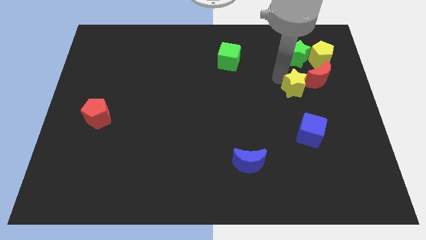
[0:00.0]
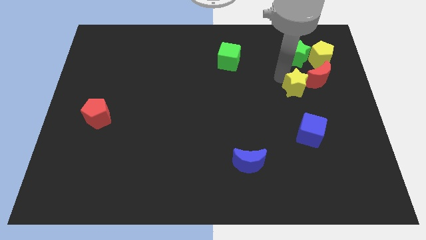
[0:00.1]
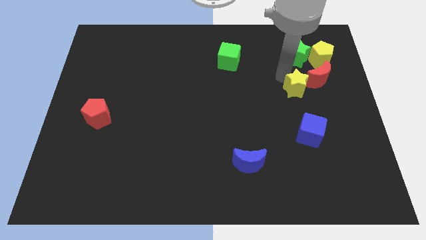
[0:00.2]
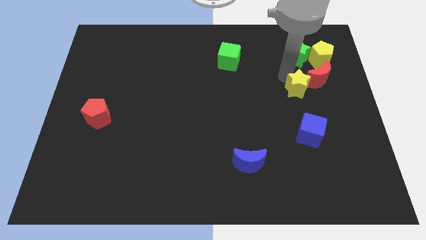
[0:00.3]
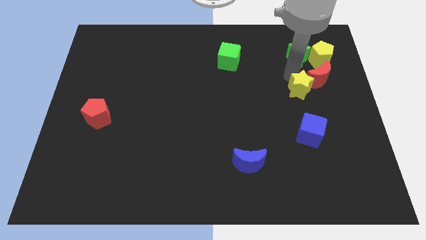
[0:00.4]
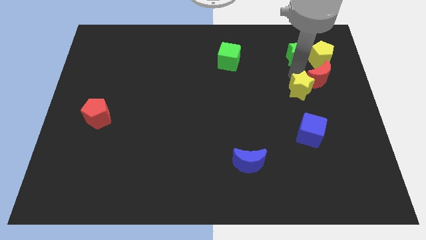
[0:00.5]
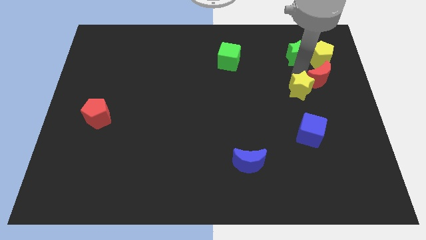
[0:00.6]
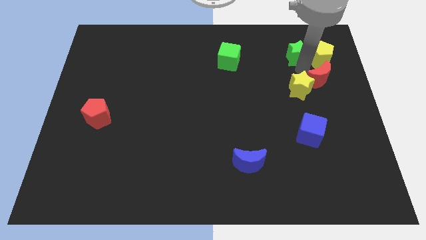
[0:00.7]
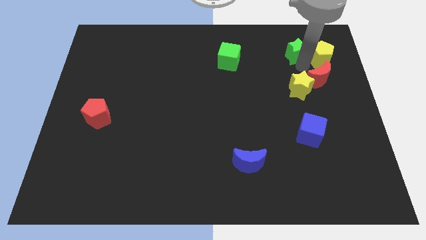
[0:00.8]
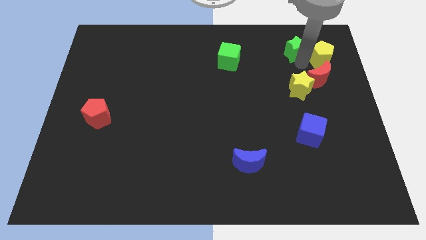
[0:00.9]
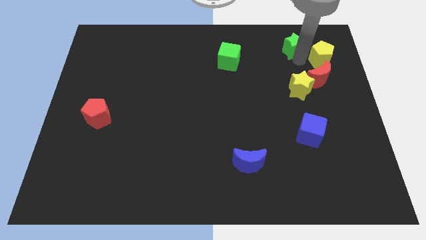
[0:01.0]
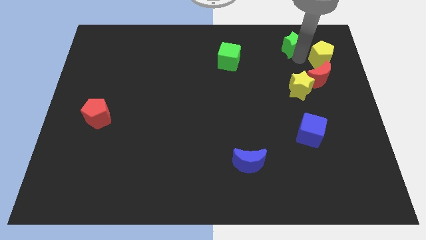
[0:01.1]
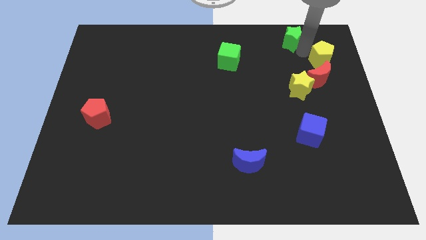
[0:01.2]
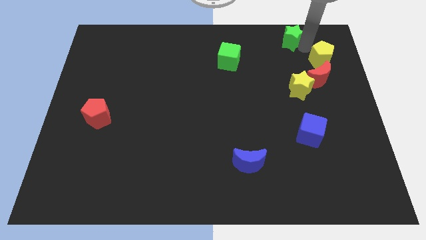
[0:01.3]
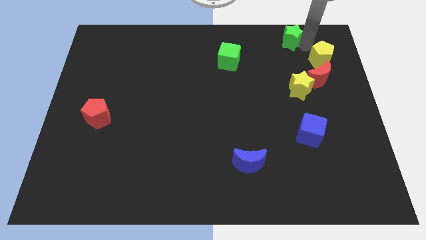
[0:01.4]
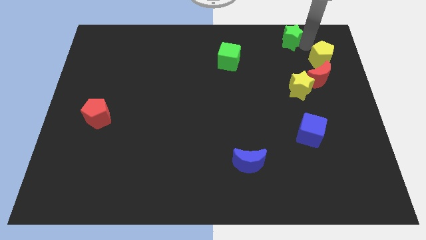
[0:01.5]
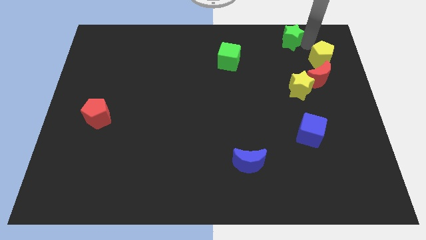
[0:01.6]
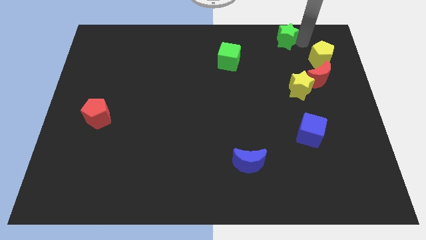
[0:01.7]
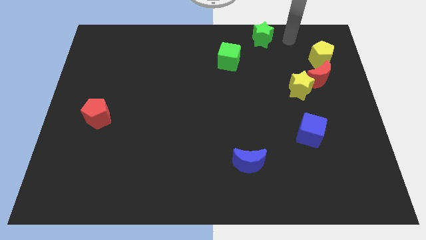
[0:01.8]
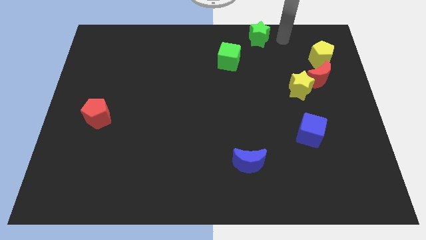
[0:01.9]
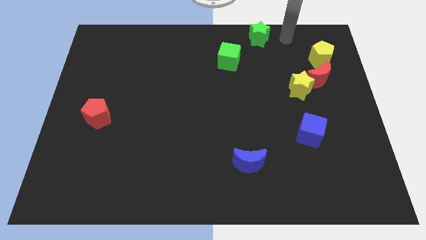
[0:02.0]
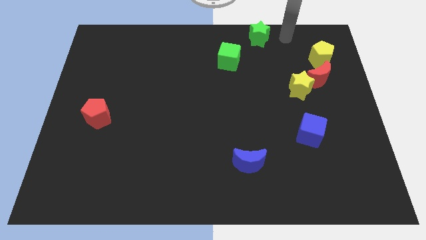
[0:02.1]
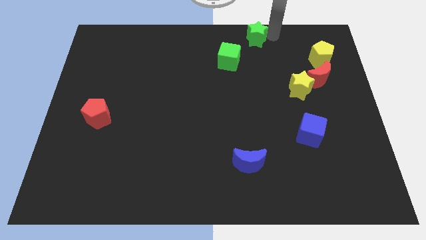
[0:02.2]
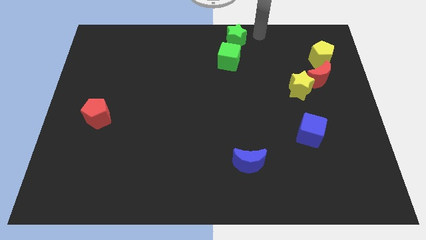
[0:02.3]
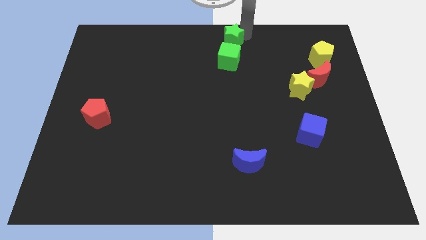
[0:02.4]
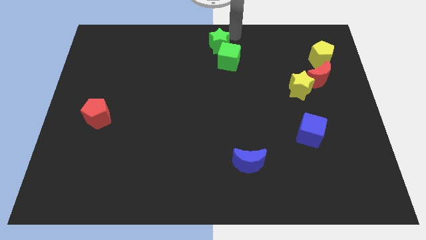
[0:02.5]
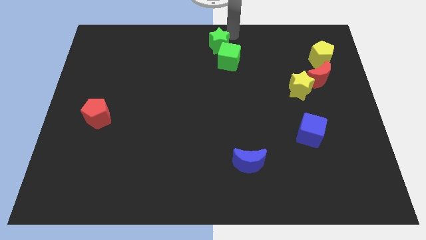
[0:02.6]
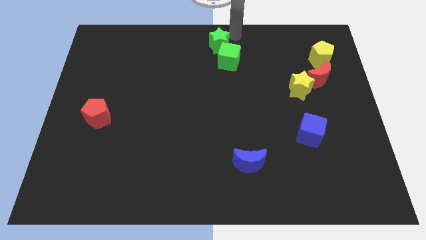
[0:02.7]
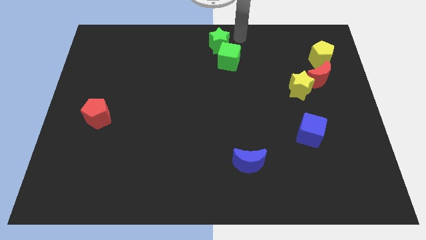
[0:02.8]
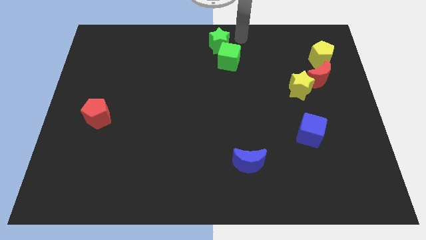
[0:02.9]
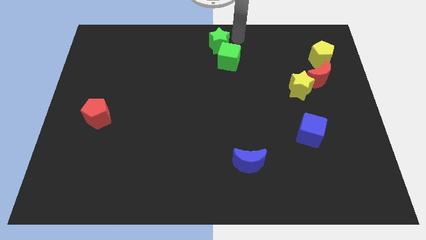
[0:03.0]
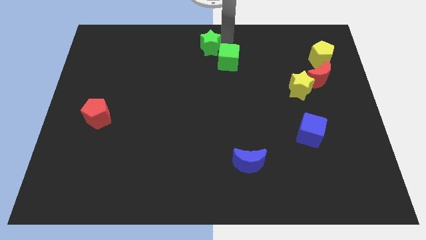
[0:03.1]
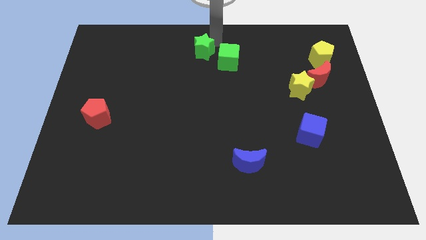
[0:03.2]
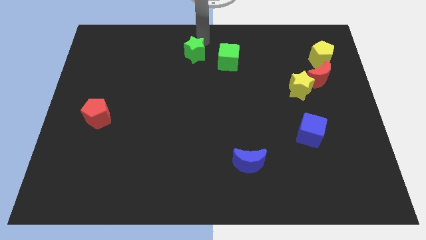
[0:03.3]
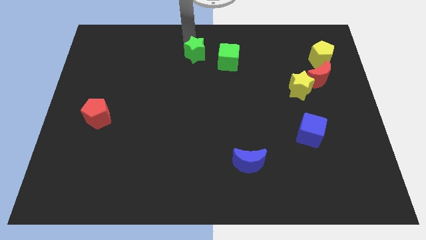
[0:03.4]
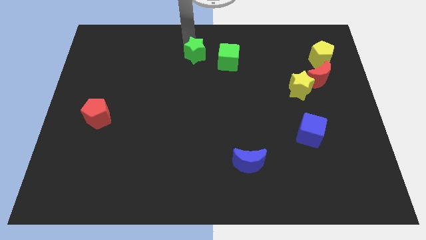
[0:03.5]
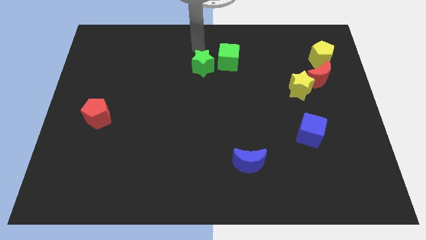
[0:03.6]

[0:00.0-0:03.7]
place the green star left to the green cube

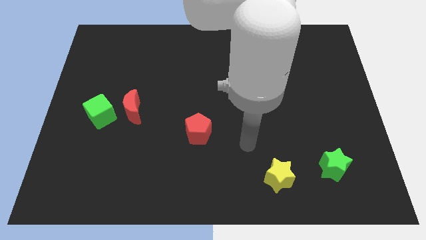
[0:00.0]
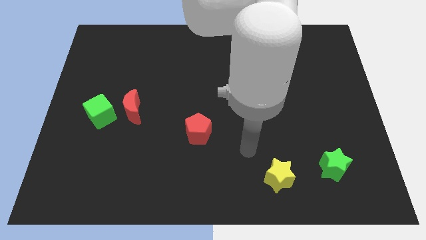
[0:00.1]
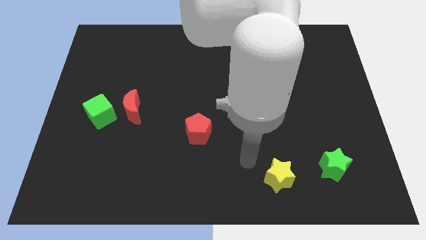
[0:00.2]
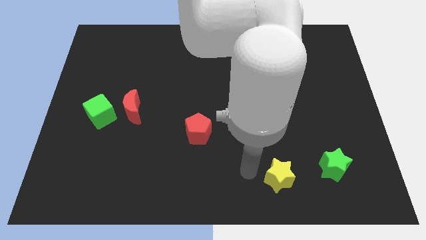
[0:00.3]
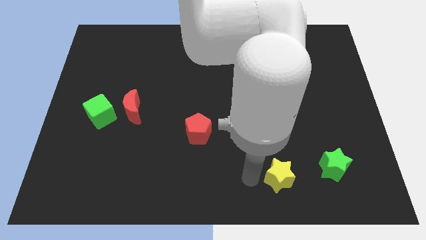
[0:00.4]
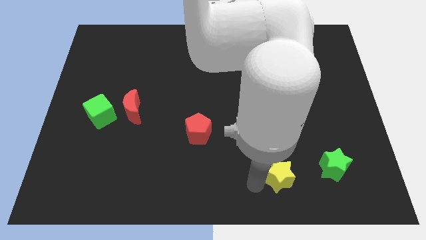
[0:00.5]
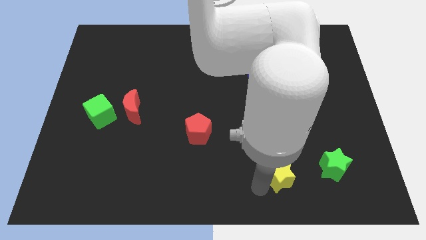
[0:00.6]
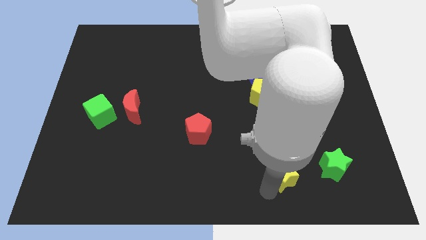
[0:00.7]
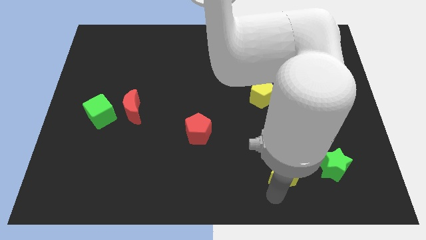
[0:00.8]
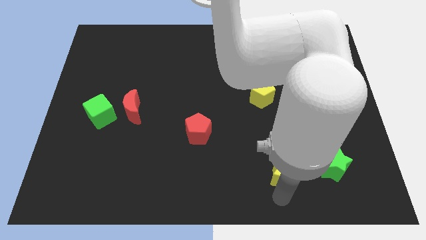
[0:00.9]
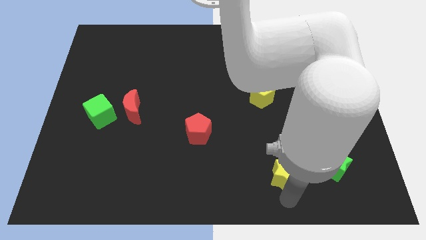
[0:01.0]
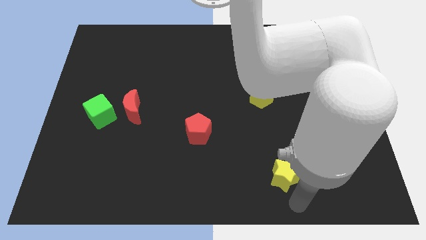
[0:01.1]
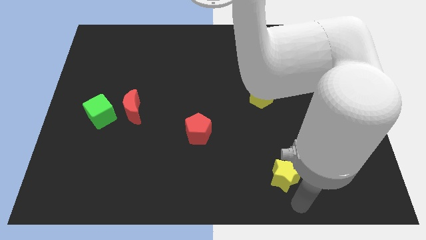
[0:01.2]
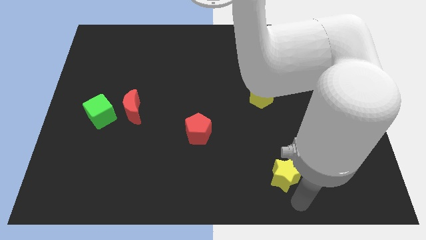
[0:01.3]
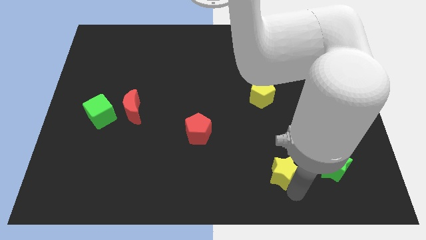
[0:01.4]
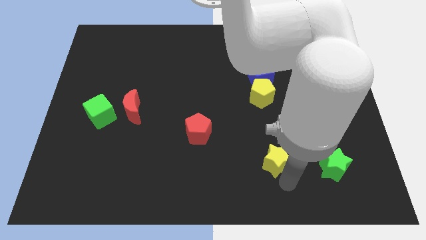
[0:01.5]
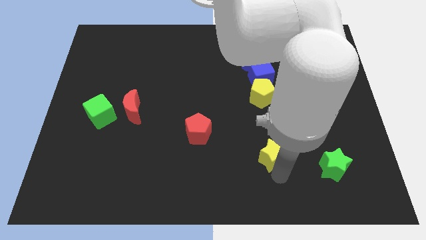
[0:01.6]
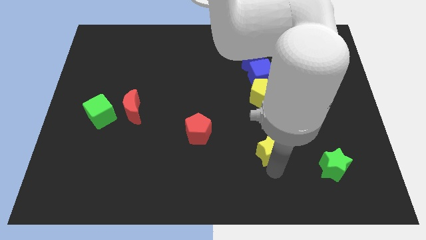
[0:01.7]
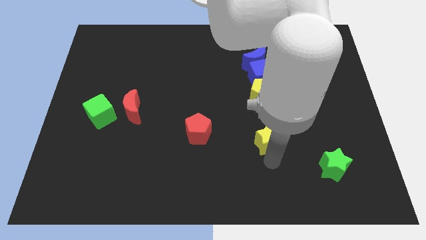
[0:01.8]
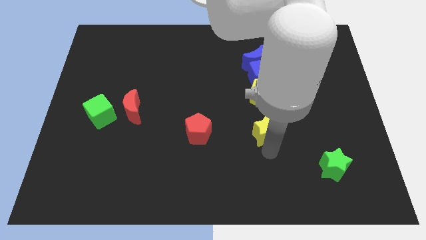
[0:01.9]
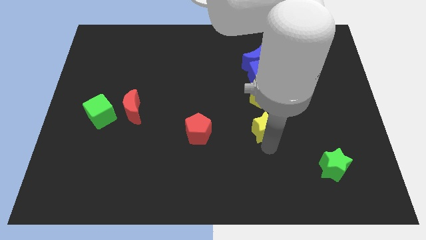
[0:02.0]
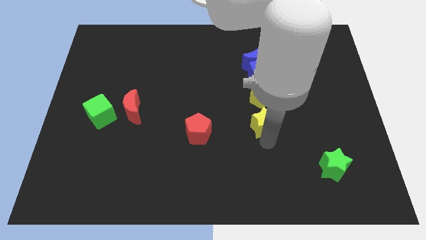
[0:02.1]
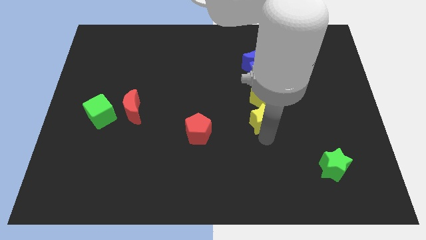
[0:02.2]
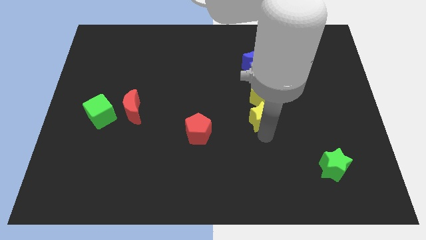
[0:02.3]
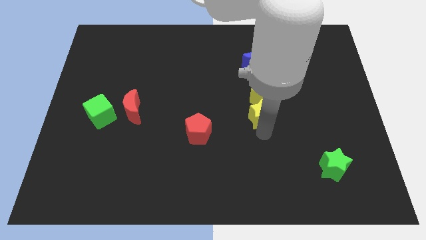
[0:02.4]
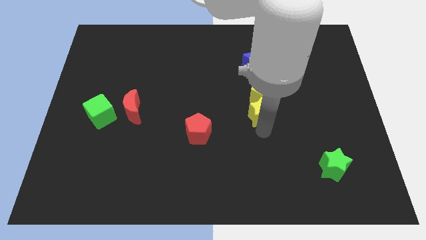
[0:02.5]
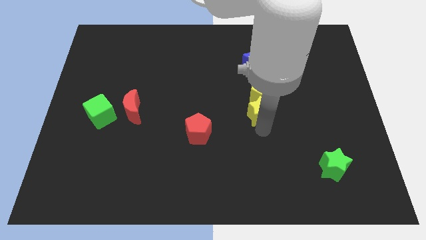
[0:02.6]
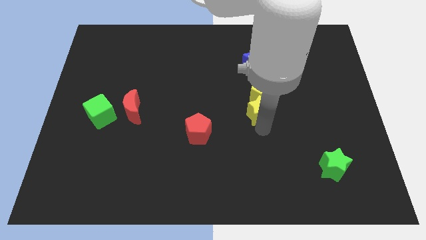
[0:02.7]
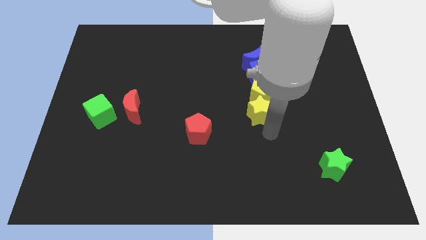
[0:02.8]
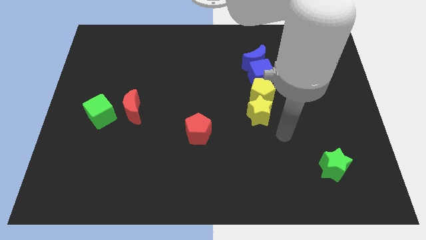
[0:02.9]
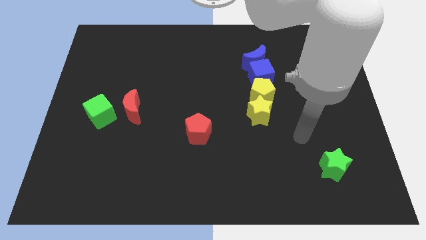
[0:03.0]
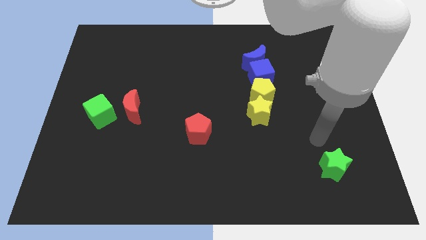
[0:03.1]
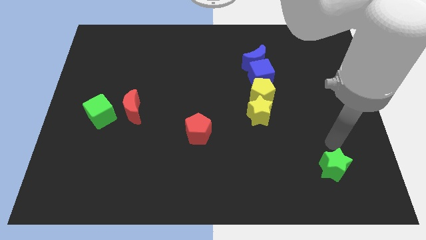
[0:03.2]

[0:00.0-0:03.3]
push the yellow star into the yellow pentagon

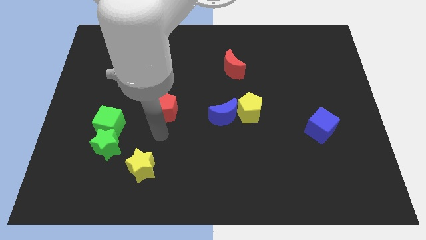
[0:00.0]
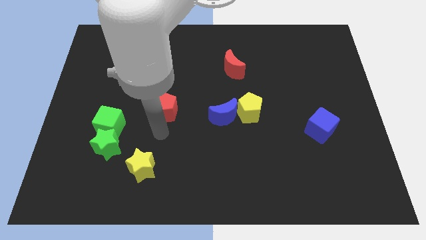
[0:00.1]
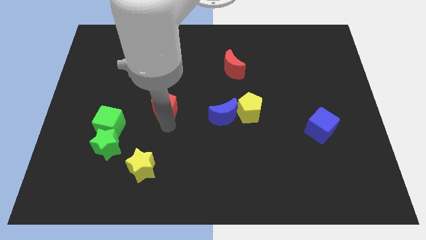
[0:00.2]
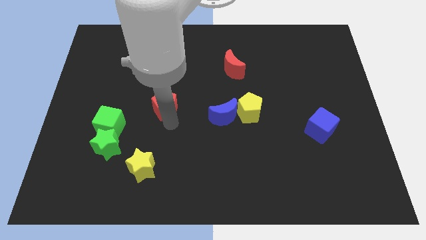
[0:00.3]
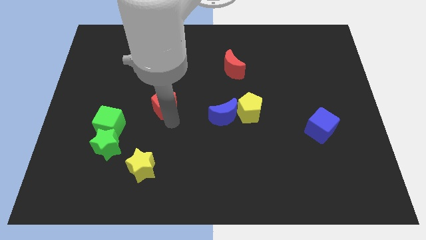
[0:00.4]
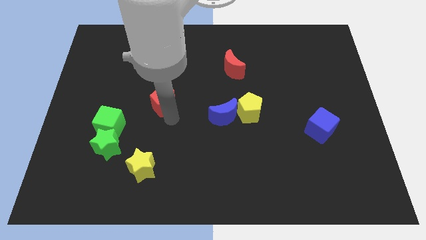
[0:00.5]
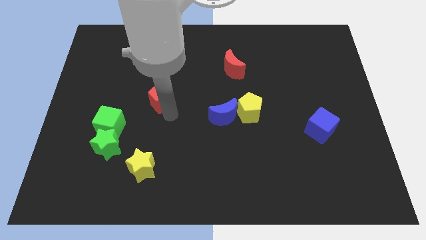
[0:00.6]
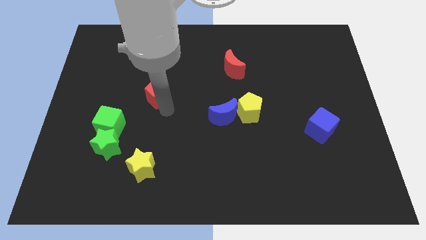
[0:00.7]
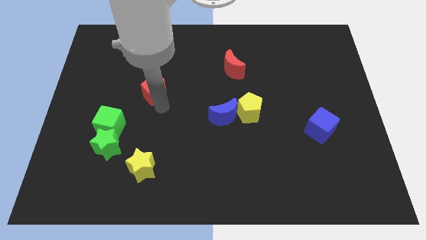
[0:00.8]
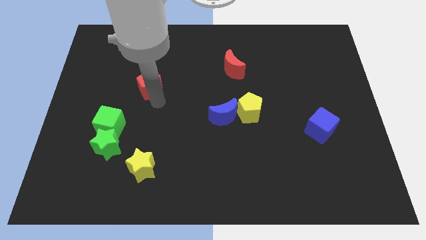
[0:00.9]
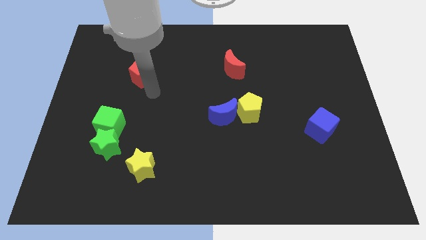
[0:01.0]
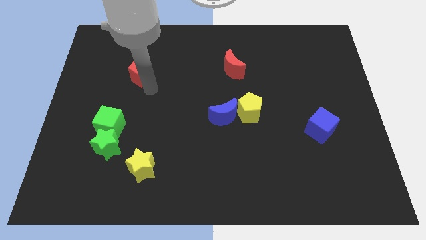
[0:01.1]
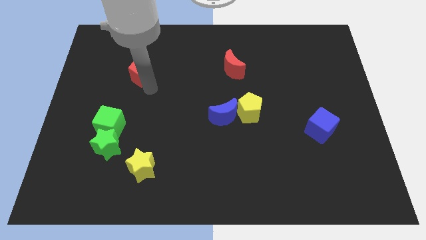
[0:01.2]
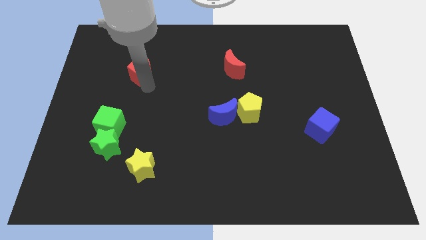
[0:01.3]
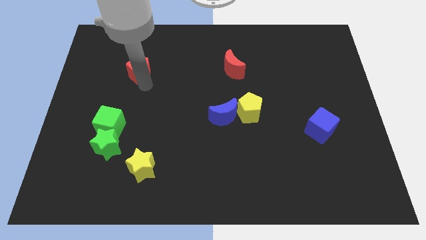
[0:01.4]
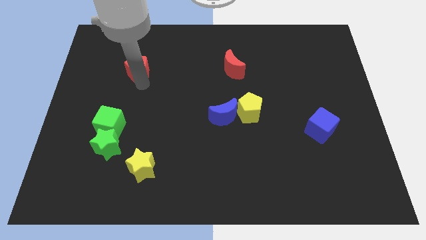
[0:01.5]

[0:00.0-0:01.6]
move the red pentagon to the left of the red crescent

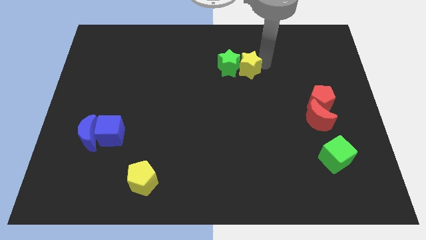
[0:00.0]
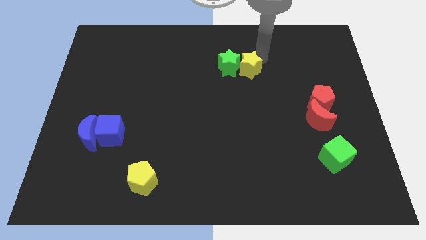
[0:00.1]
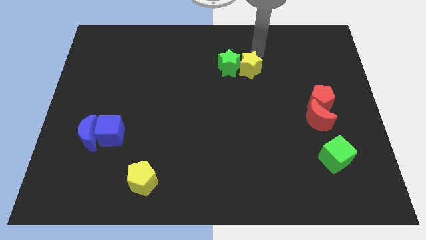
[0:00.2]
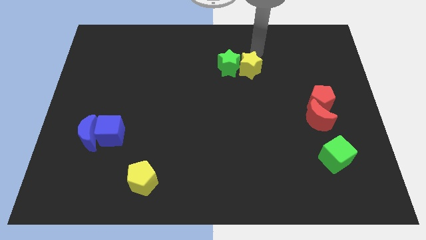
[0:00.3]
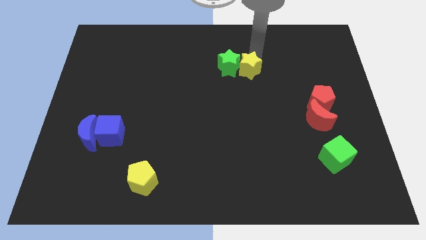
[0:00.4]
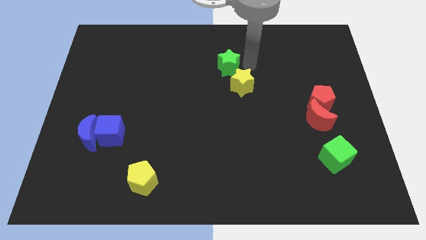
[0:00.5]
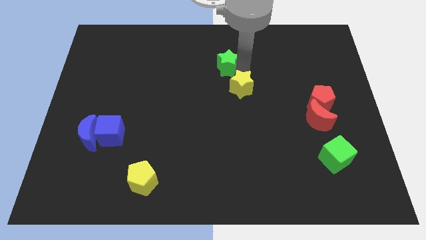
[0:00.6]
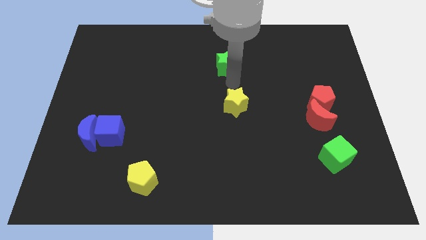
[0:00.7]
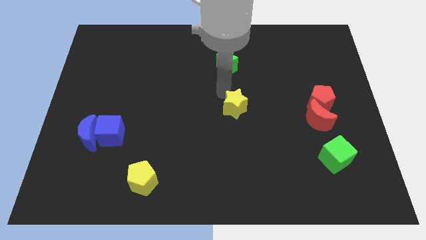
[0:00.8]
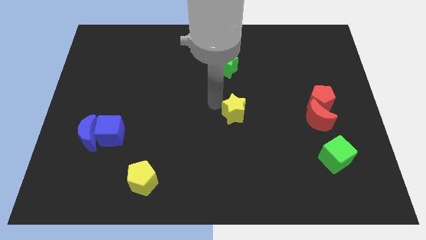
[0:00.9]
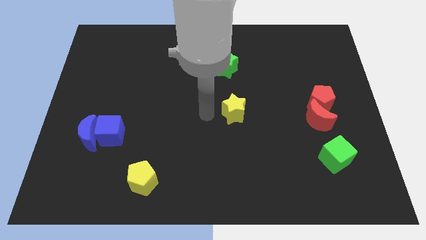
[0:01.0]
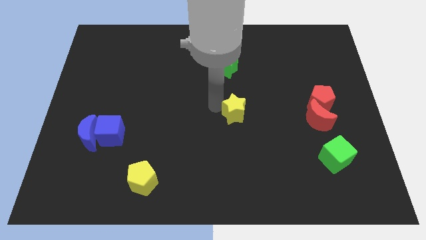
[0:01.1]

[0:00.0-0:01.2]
drag the yellow star vertically below the green star
